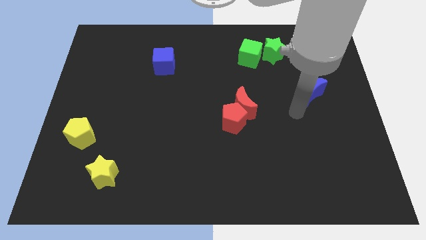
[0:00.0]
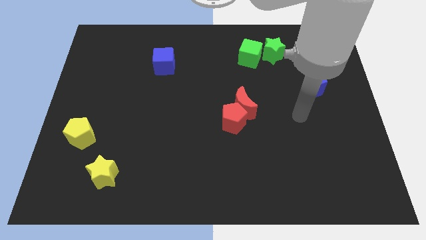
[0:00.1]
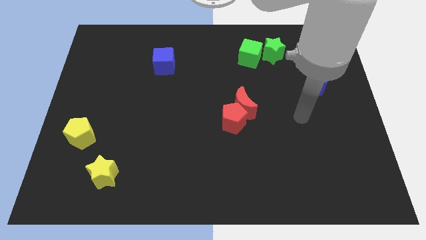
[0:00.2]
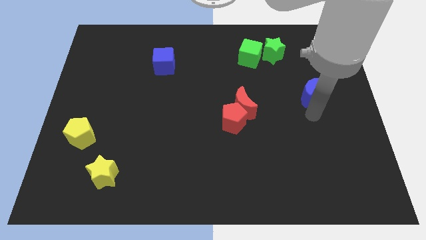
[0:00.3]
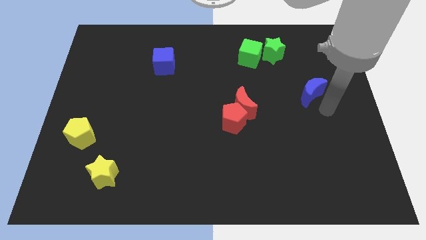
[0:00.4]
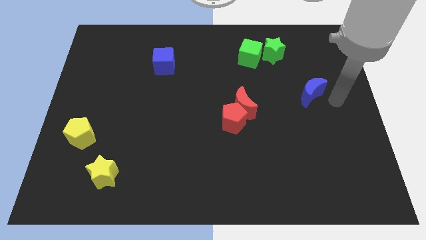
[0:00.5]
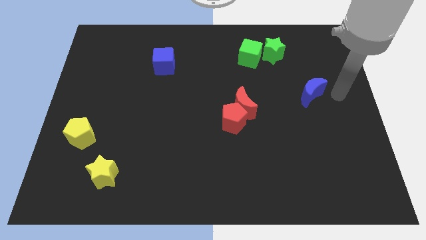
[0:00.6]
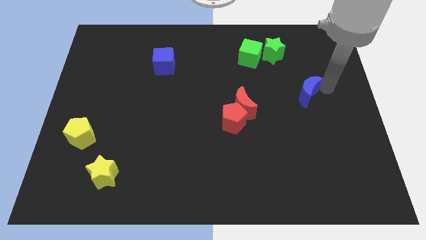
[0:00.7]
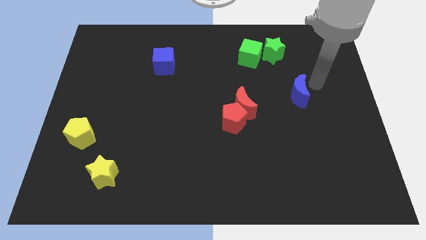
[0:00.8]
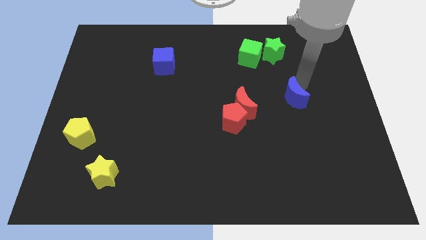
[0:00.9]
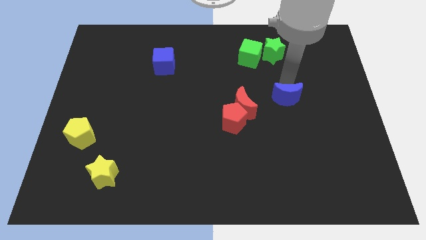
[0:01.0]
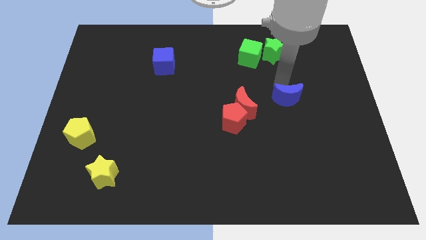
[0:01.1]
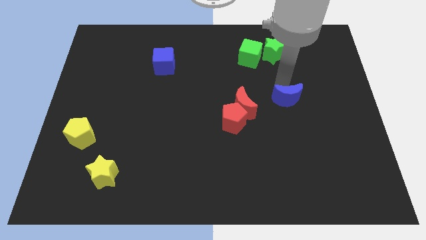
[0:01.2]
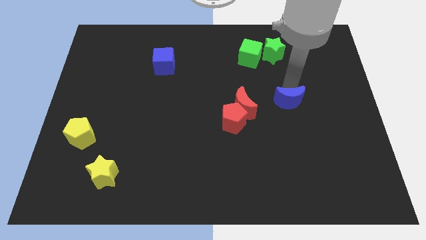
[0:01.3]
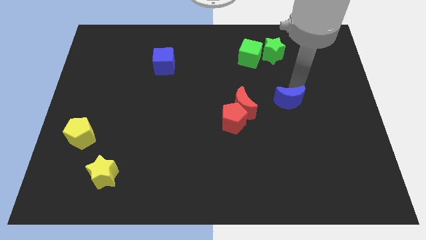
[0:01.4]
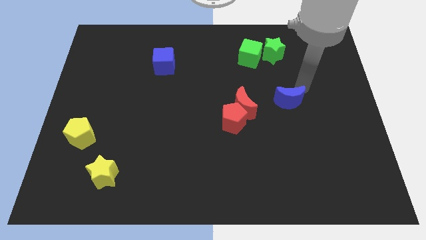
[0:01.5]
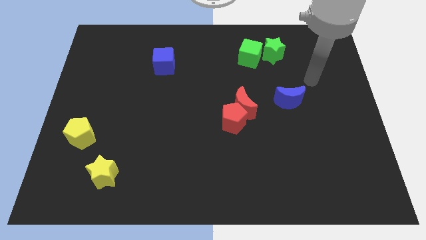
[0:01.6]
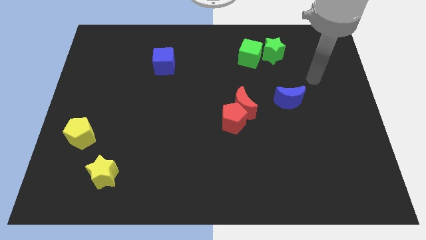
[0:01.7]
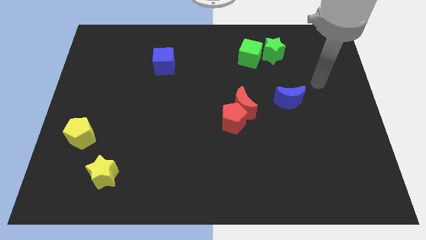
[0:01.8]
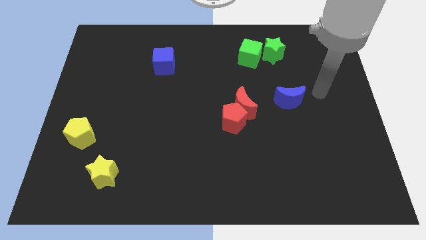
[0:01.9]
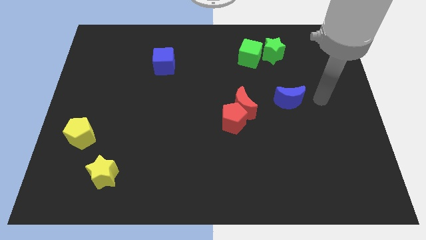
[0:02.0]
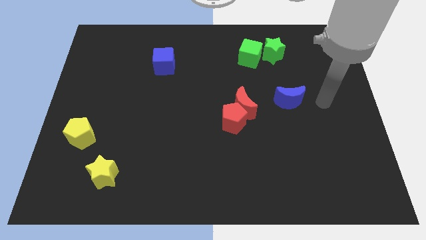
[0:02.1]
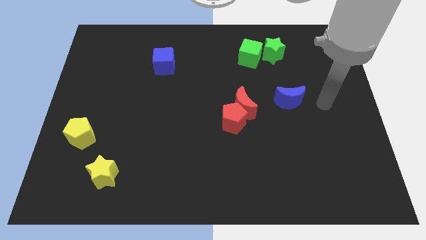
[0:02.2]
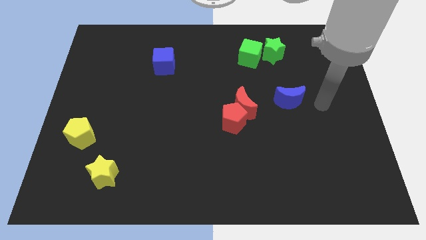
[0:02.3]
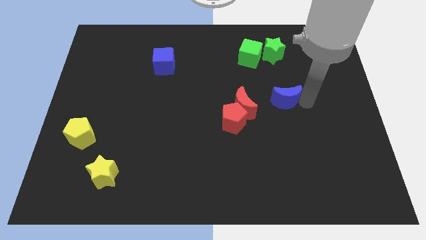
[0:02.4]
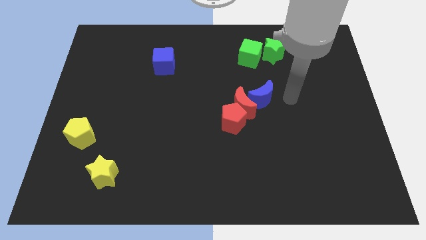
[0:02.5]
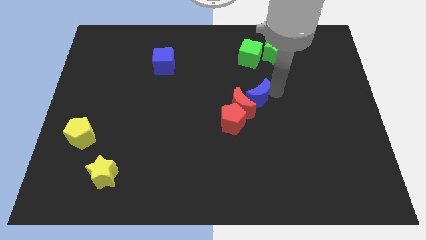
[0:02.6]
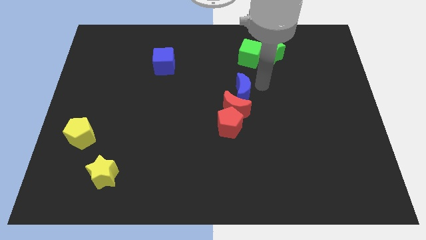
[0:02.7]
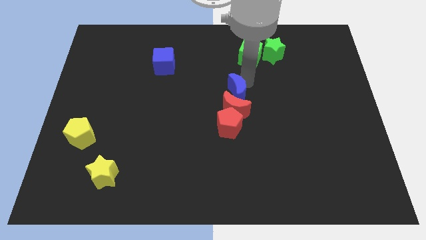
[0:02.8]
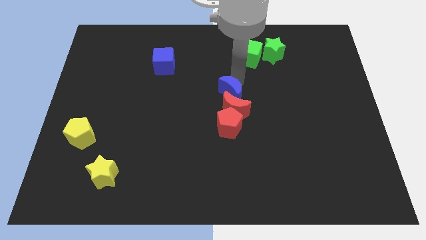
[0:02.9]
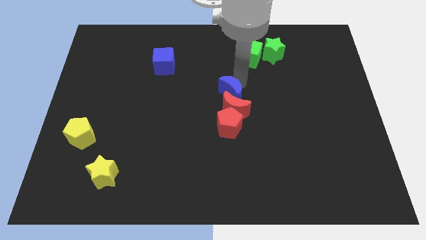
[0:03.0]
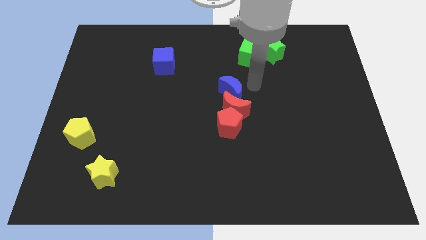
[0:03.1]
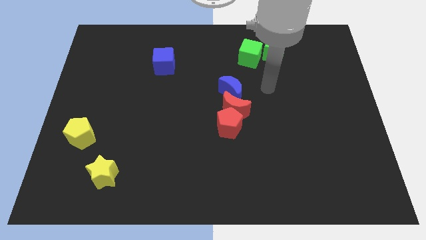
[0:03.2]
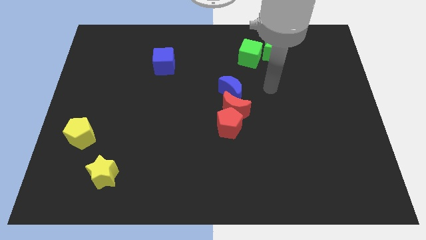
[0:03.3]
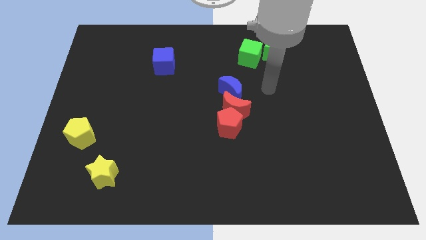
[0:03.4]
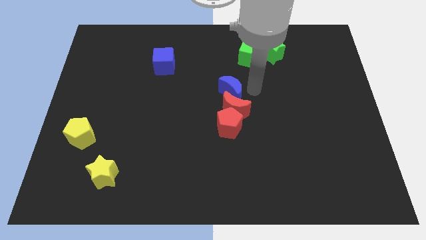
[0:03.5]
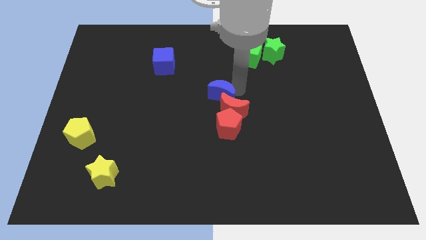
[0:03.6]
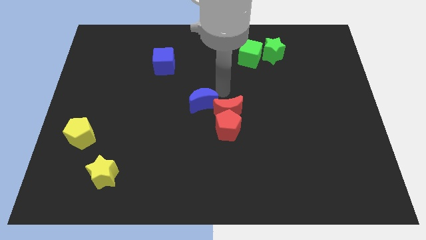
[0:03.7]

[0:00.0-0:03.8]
move the blue moon diagonally to the bottom right of the blue cube

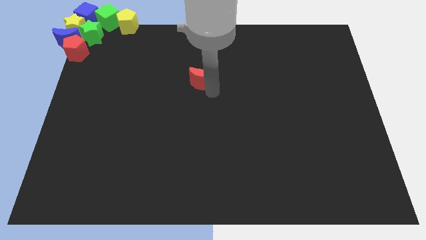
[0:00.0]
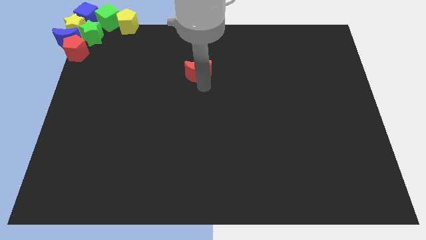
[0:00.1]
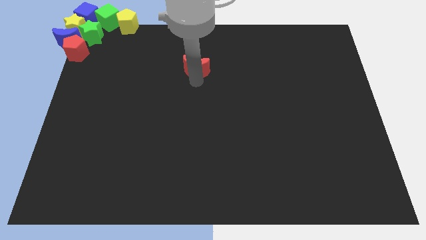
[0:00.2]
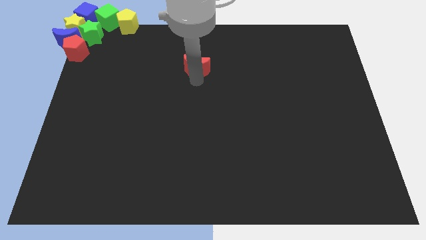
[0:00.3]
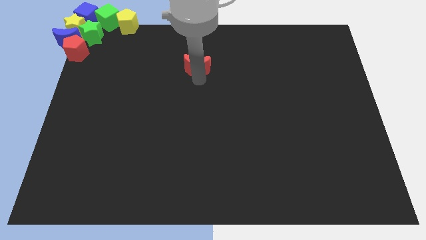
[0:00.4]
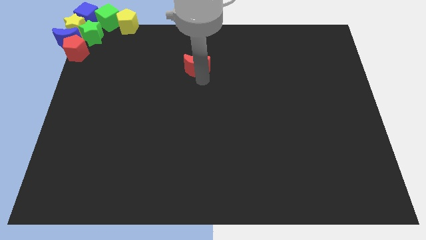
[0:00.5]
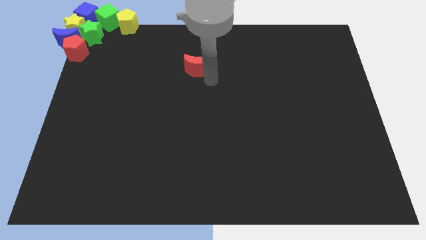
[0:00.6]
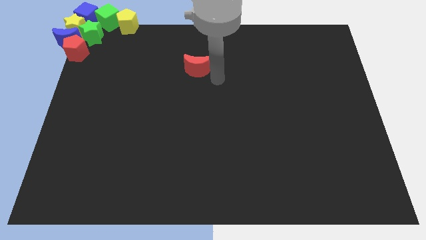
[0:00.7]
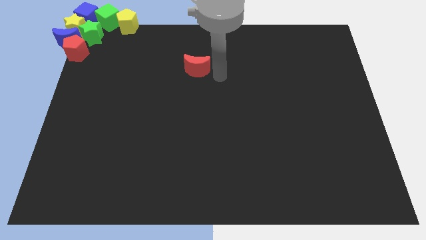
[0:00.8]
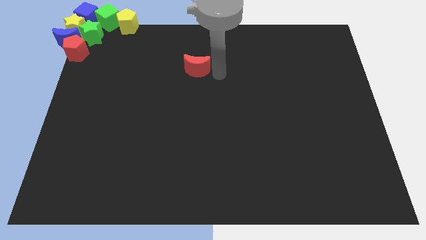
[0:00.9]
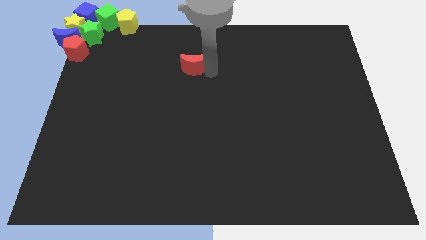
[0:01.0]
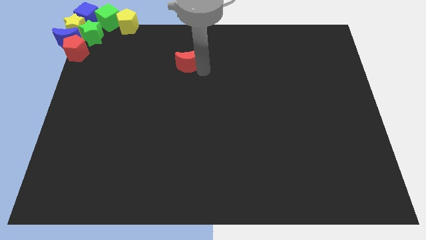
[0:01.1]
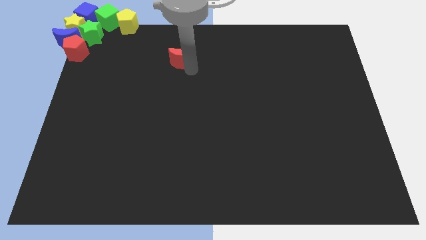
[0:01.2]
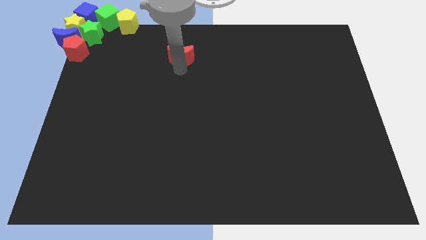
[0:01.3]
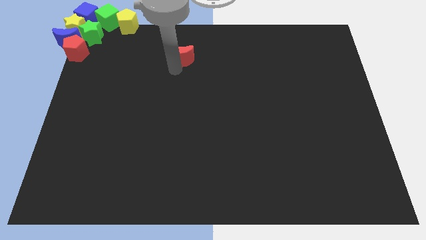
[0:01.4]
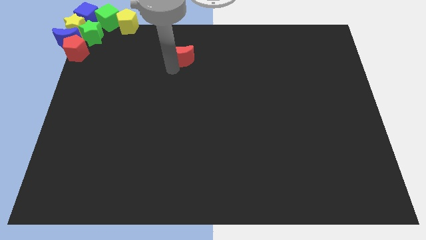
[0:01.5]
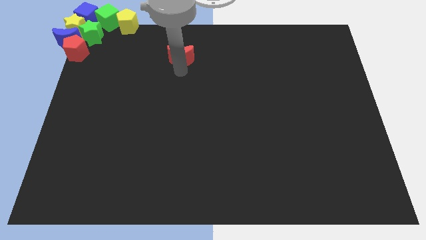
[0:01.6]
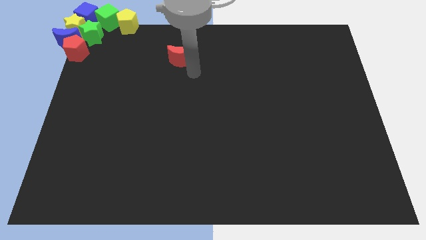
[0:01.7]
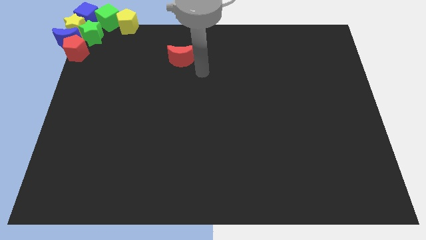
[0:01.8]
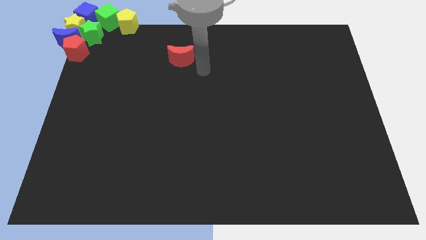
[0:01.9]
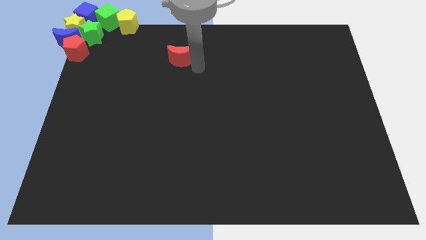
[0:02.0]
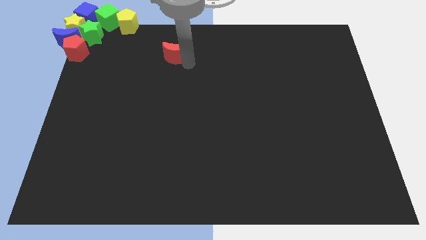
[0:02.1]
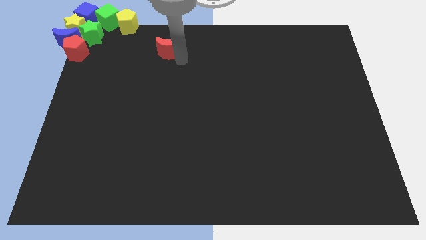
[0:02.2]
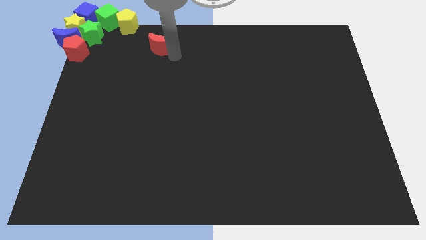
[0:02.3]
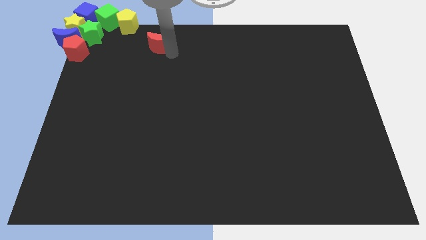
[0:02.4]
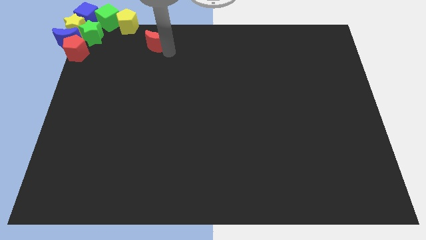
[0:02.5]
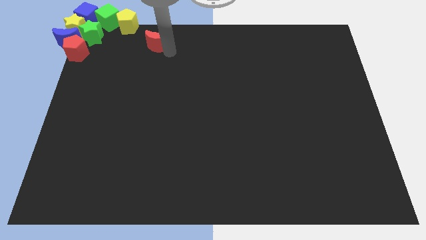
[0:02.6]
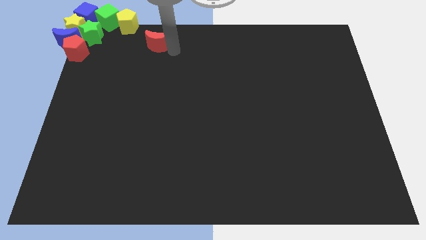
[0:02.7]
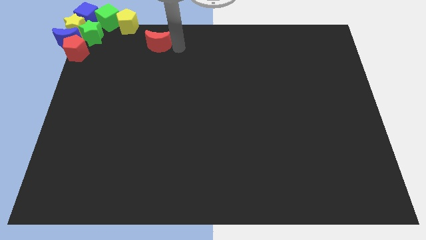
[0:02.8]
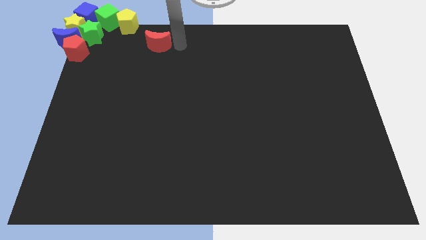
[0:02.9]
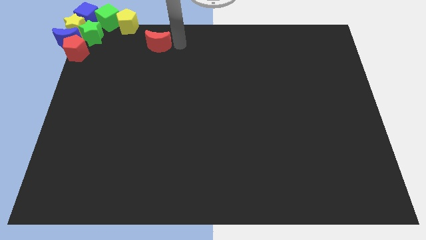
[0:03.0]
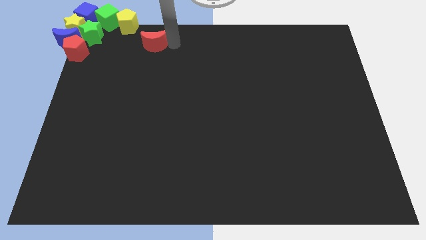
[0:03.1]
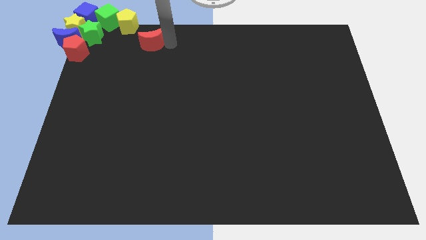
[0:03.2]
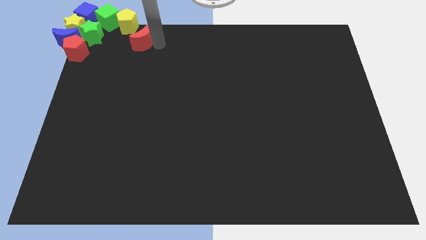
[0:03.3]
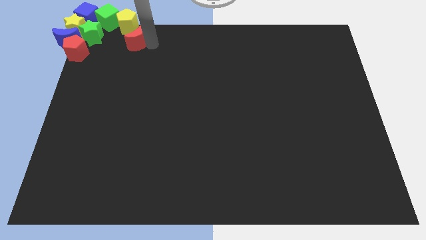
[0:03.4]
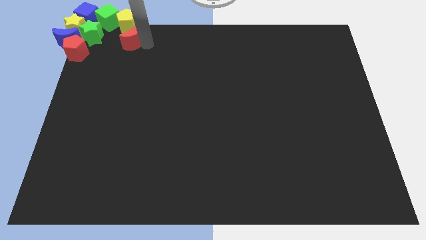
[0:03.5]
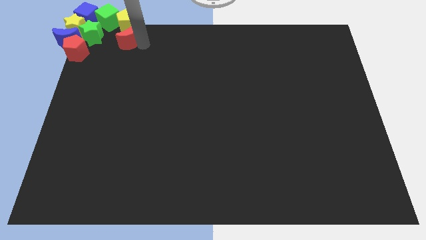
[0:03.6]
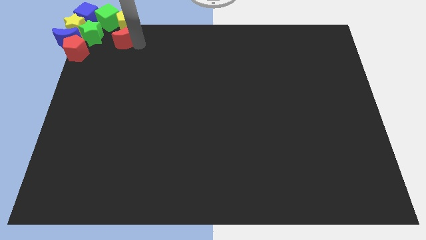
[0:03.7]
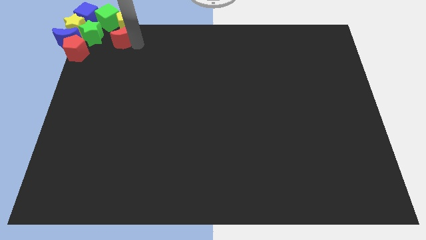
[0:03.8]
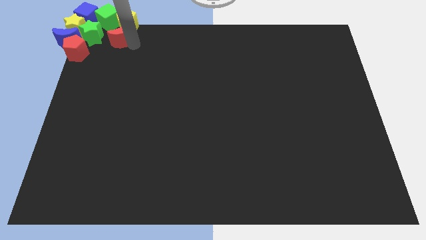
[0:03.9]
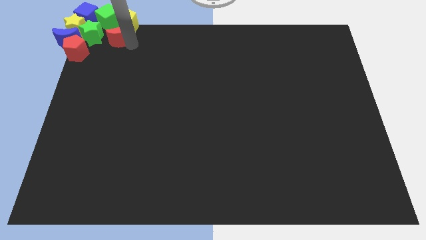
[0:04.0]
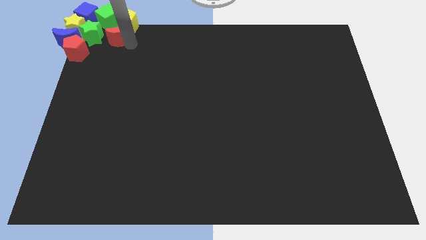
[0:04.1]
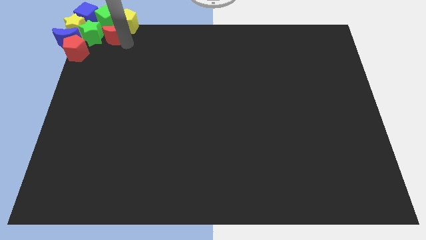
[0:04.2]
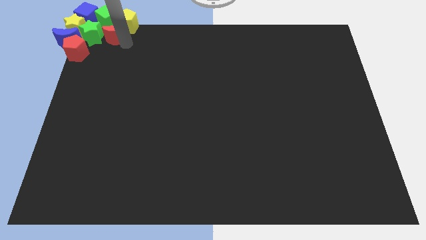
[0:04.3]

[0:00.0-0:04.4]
place the red crescent towards the right side of the green star

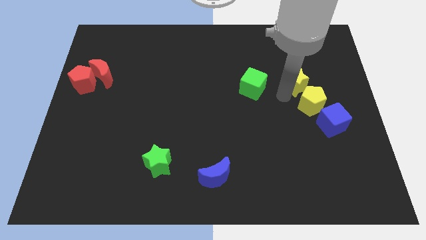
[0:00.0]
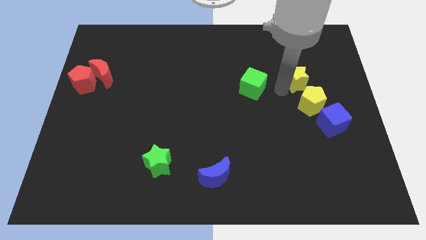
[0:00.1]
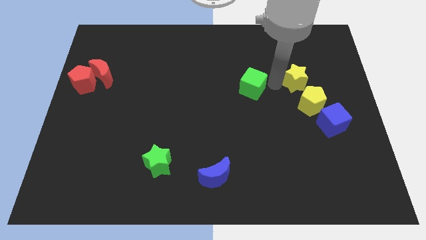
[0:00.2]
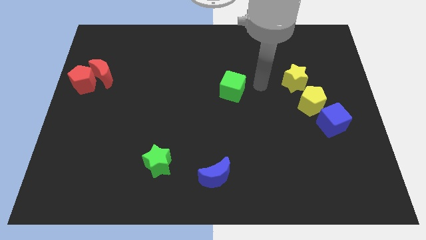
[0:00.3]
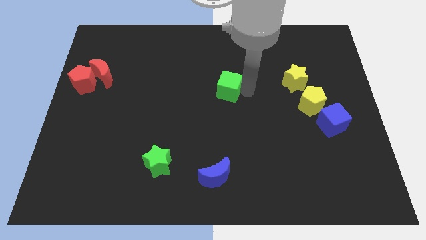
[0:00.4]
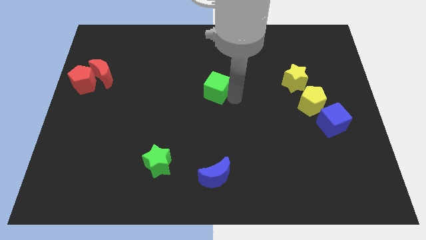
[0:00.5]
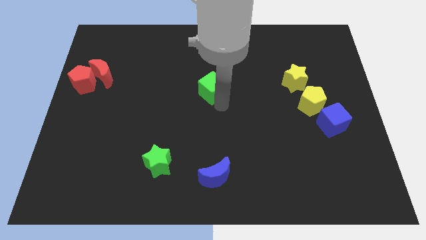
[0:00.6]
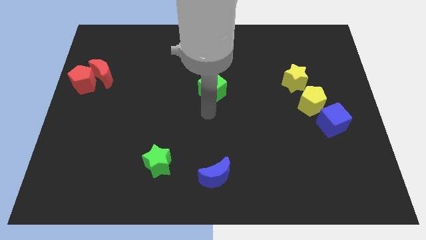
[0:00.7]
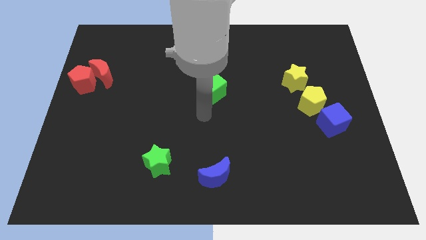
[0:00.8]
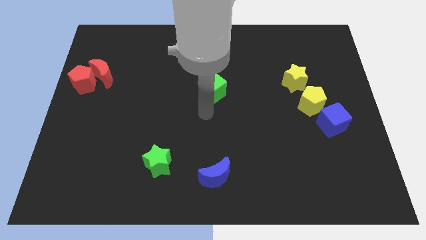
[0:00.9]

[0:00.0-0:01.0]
push the green cube above the blue crescent
